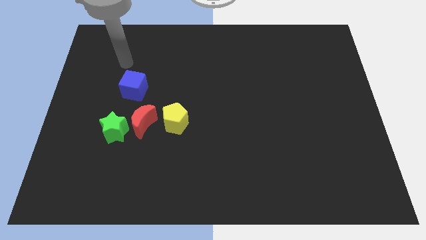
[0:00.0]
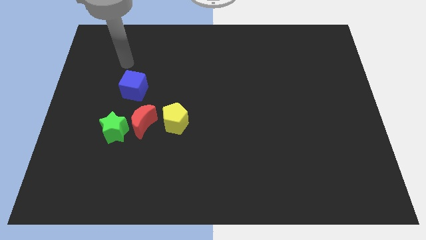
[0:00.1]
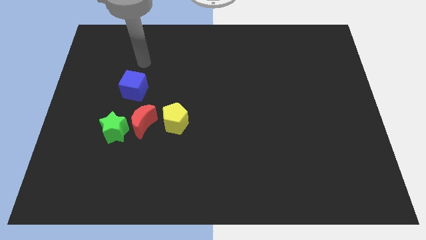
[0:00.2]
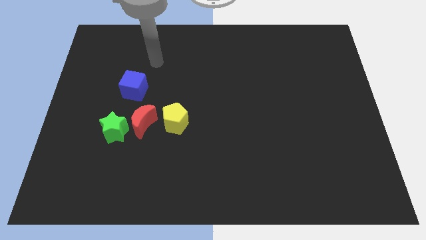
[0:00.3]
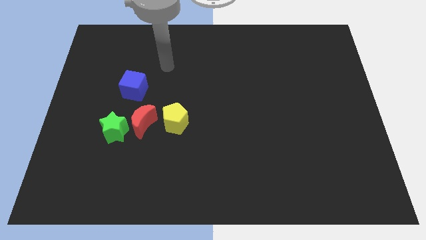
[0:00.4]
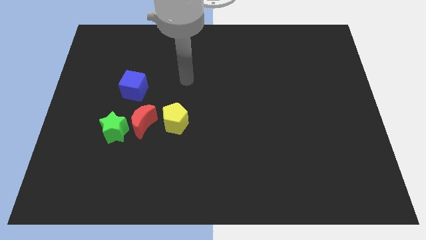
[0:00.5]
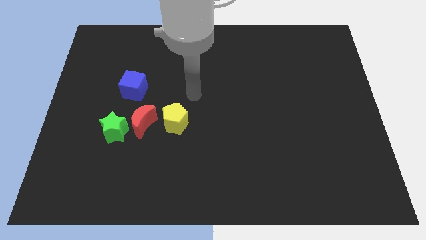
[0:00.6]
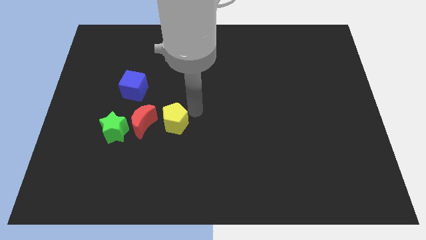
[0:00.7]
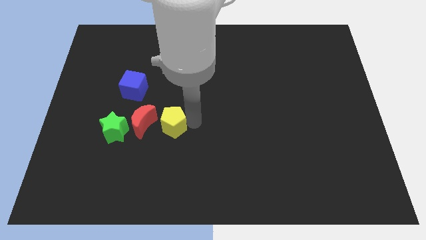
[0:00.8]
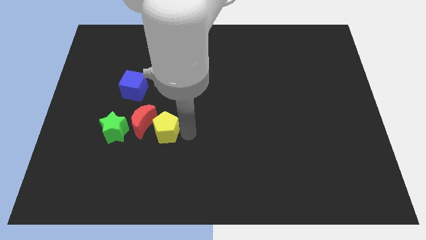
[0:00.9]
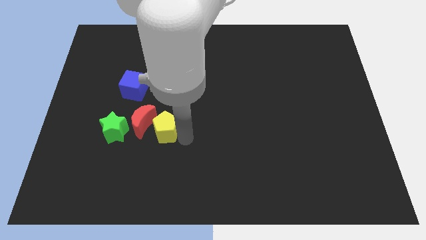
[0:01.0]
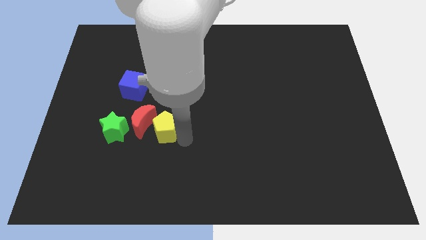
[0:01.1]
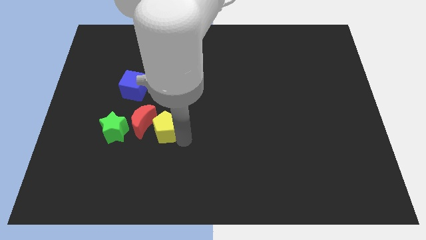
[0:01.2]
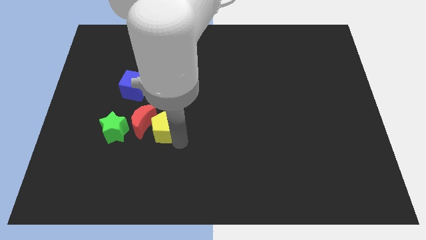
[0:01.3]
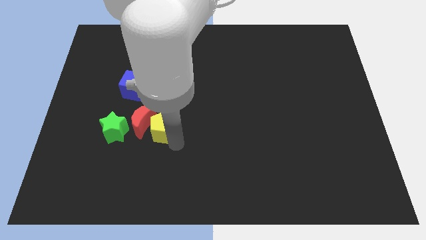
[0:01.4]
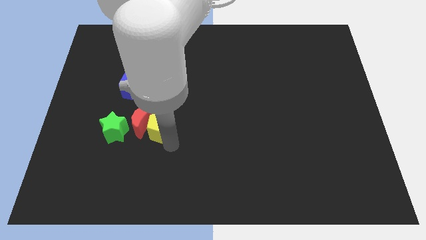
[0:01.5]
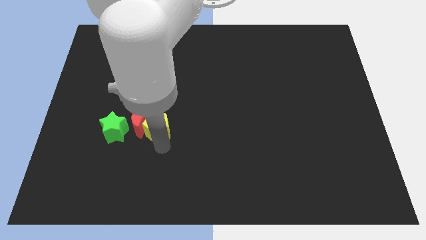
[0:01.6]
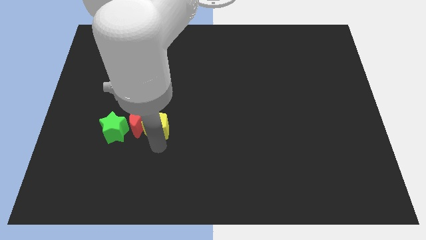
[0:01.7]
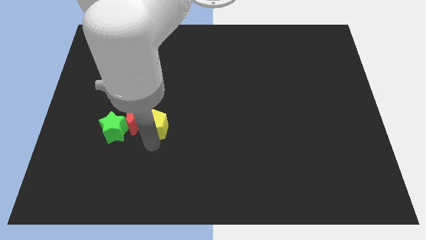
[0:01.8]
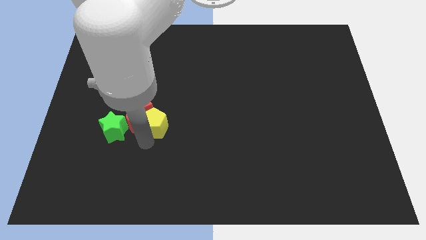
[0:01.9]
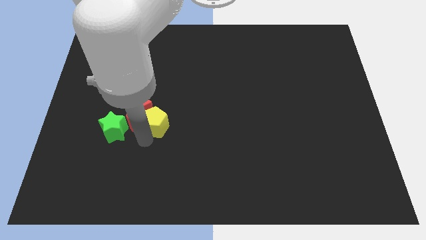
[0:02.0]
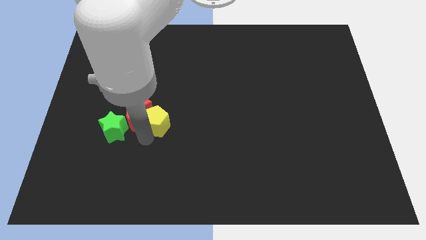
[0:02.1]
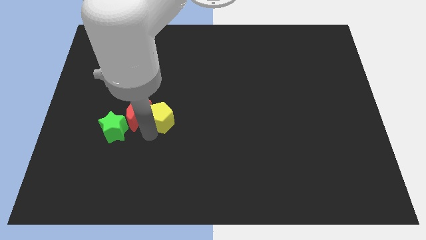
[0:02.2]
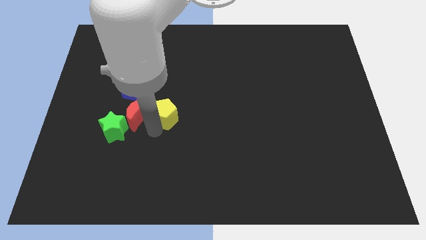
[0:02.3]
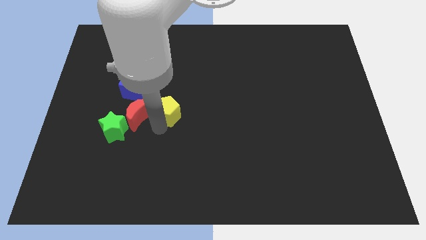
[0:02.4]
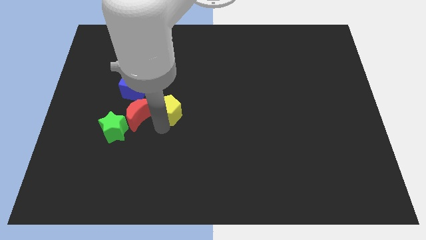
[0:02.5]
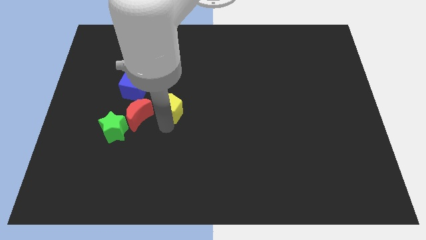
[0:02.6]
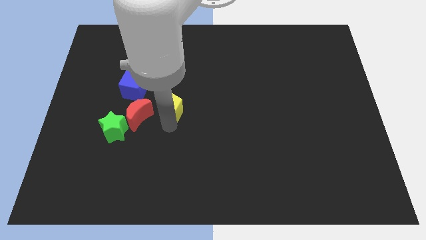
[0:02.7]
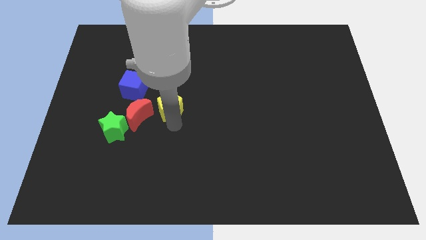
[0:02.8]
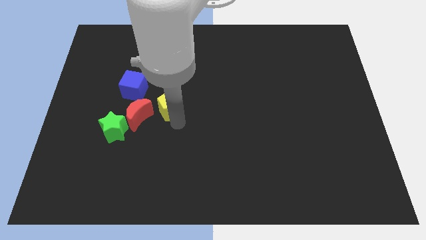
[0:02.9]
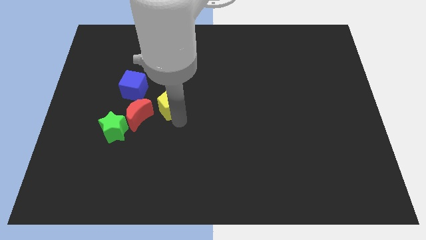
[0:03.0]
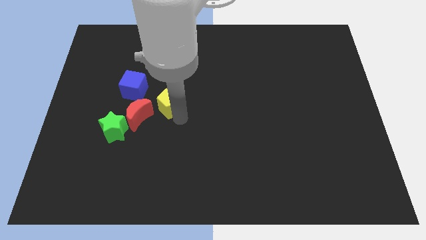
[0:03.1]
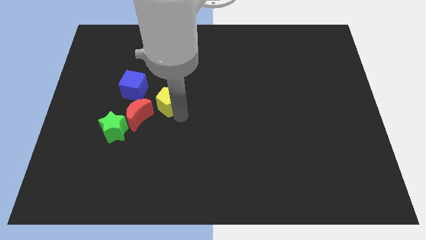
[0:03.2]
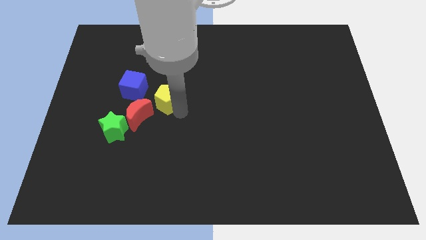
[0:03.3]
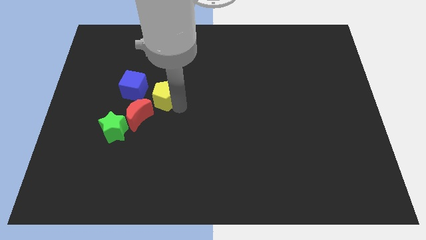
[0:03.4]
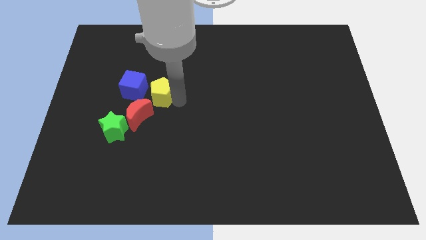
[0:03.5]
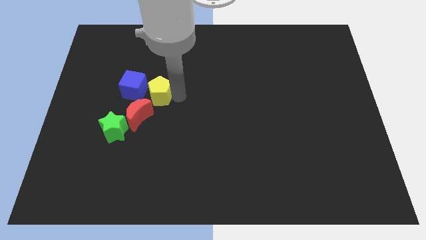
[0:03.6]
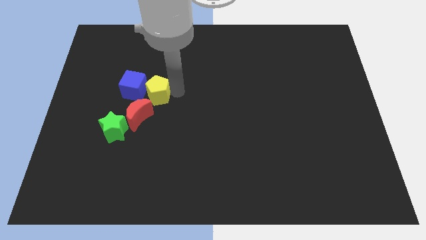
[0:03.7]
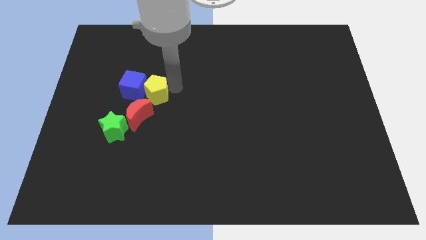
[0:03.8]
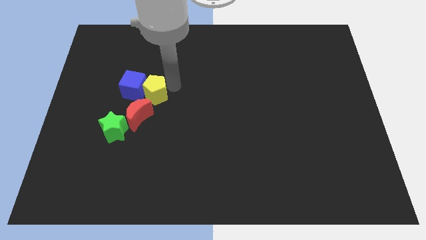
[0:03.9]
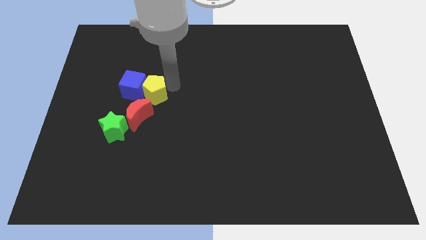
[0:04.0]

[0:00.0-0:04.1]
push the pentagon to the blue cube

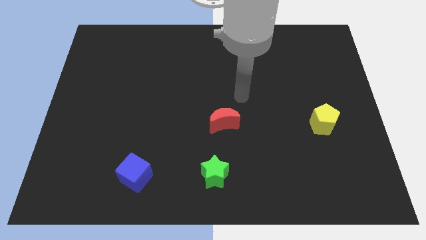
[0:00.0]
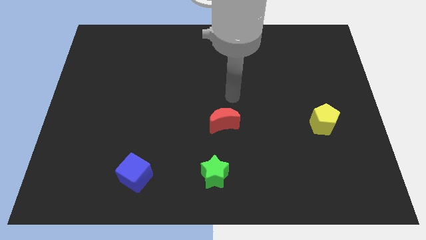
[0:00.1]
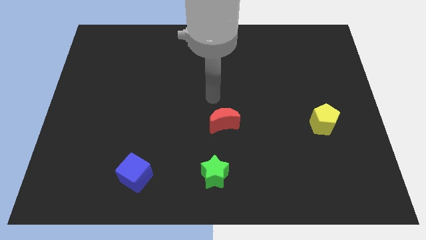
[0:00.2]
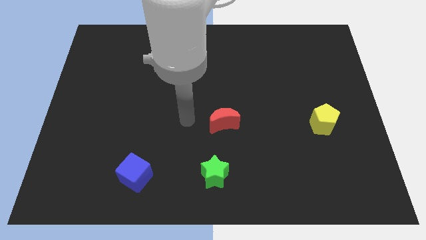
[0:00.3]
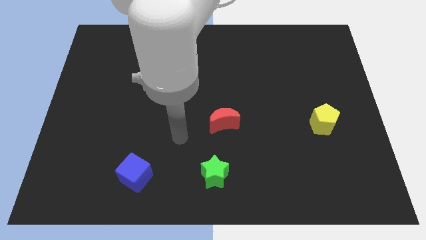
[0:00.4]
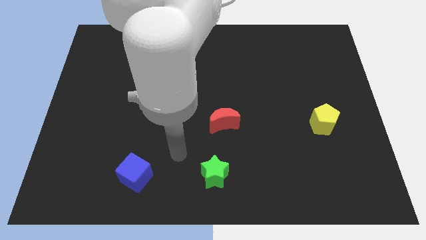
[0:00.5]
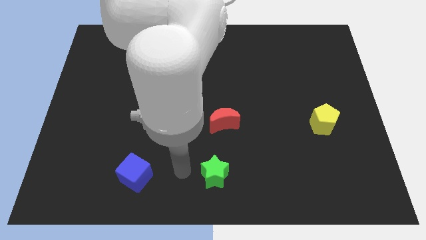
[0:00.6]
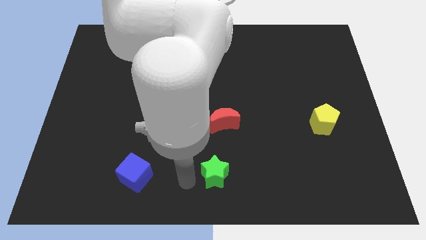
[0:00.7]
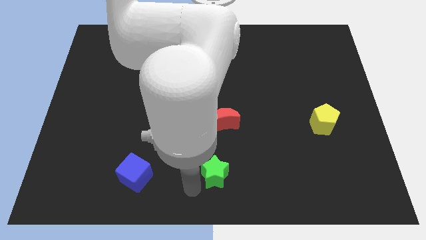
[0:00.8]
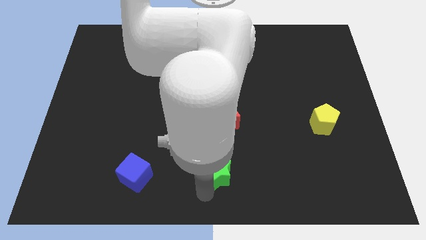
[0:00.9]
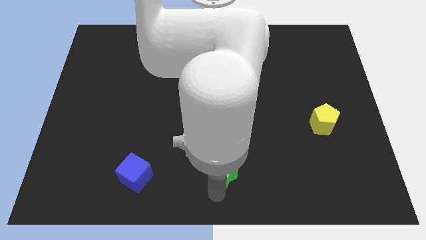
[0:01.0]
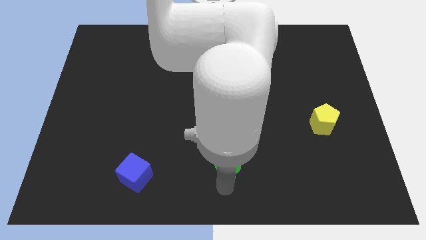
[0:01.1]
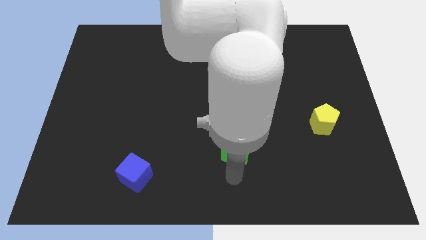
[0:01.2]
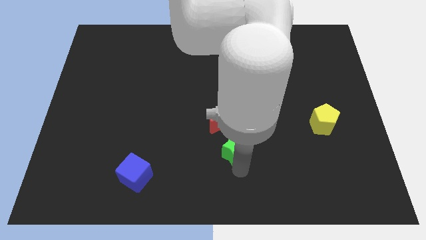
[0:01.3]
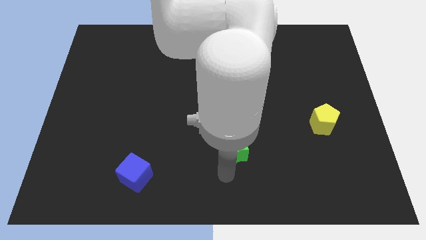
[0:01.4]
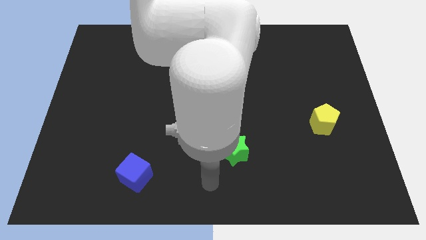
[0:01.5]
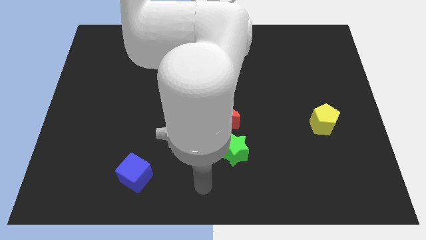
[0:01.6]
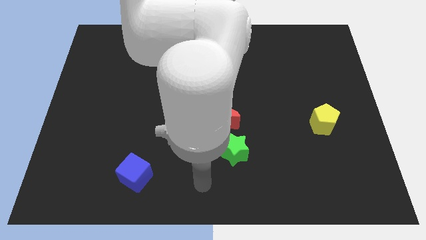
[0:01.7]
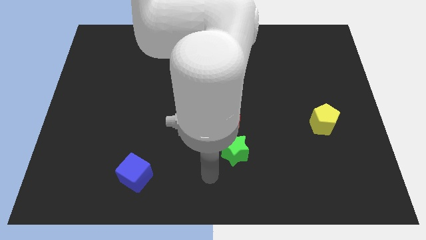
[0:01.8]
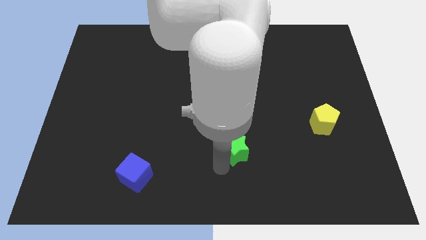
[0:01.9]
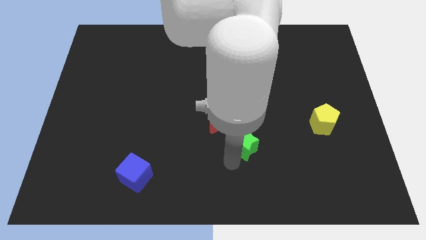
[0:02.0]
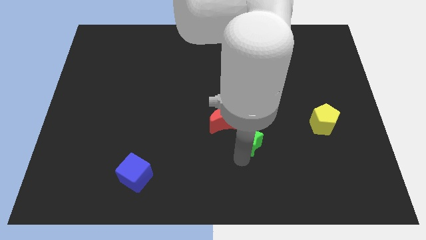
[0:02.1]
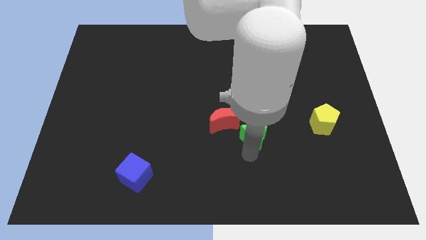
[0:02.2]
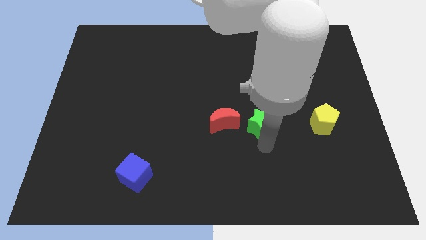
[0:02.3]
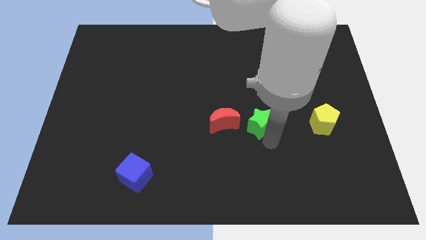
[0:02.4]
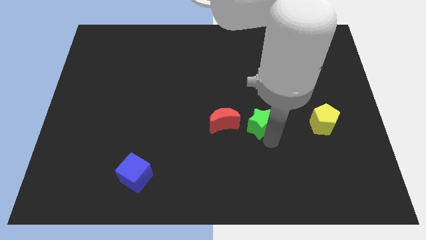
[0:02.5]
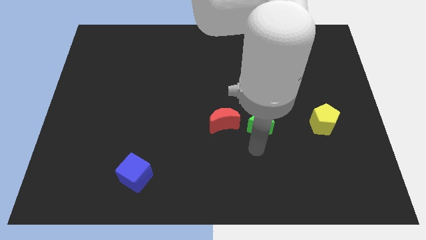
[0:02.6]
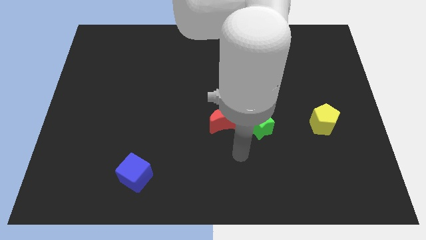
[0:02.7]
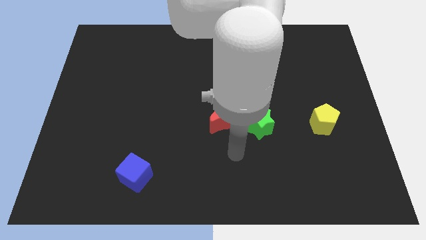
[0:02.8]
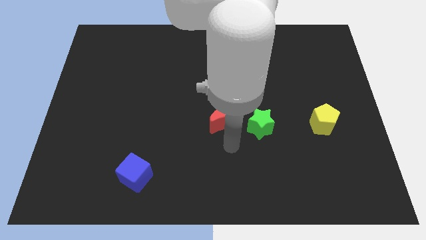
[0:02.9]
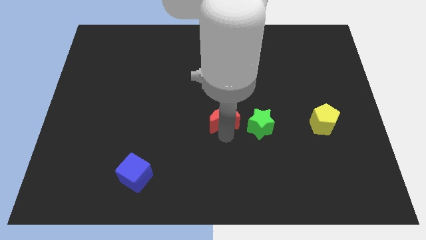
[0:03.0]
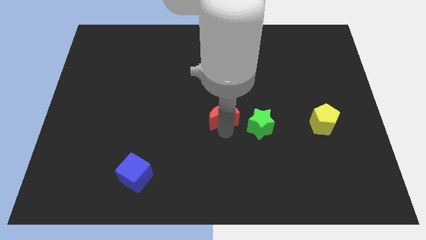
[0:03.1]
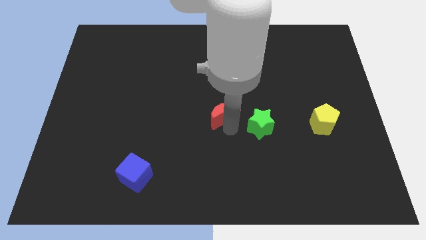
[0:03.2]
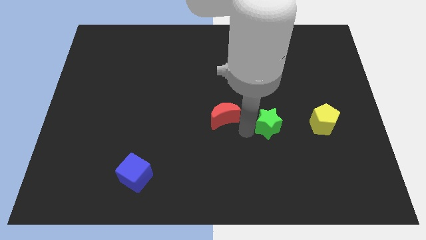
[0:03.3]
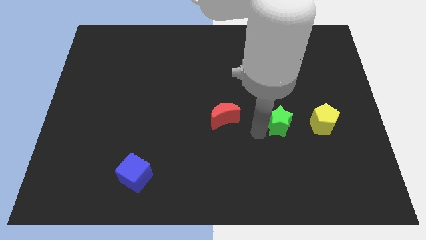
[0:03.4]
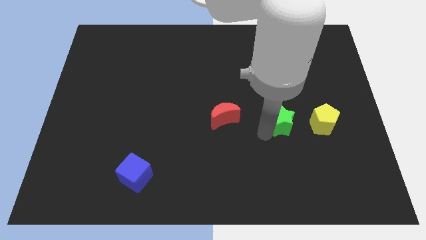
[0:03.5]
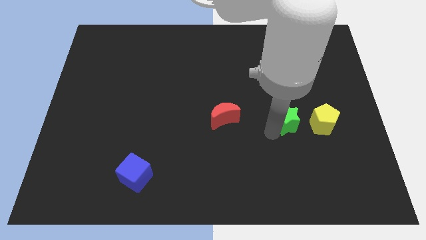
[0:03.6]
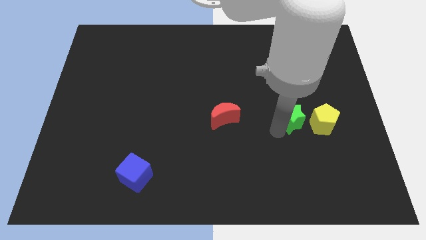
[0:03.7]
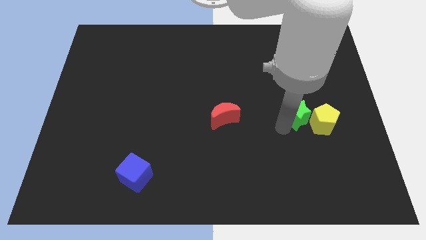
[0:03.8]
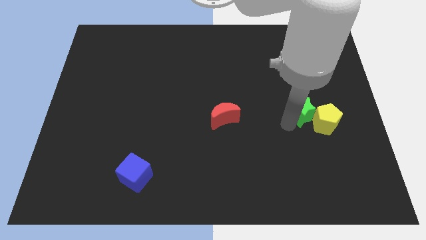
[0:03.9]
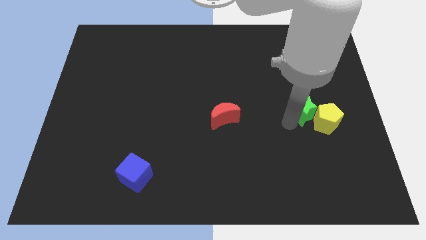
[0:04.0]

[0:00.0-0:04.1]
put the green block close to the yellow pentagon
